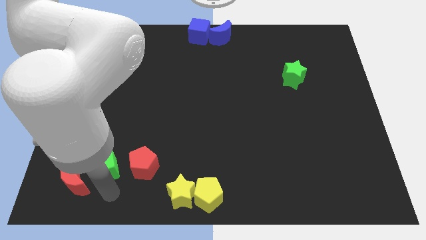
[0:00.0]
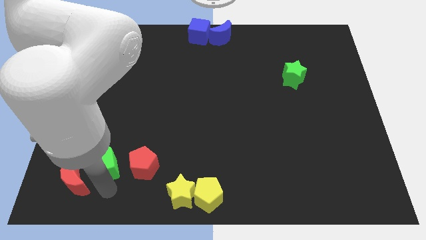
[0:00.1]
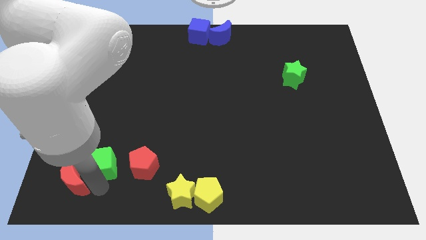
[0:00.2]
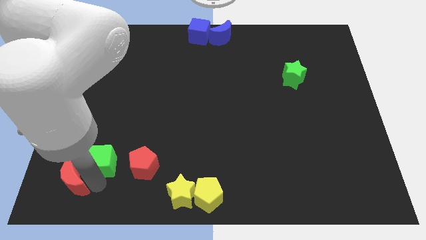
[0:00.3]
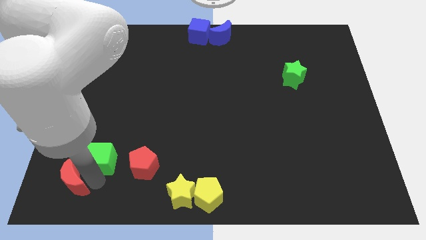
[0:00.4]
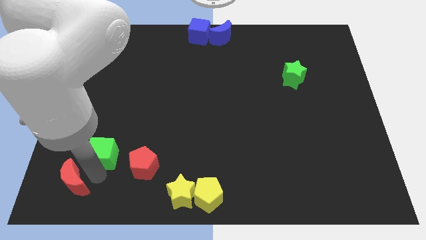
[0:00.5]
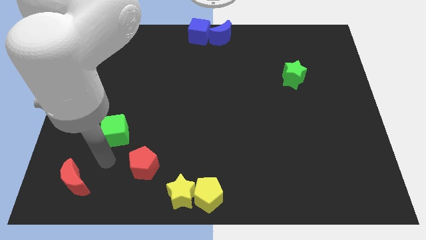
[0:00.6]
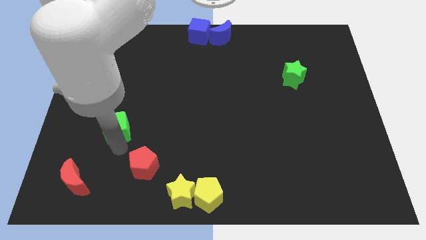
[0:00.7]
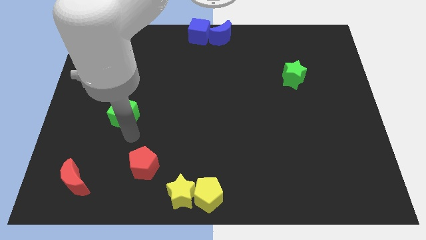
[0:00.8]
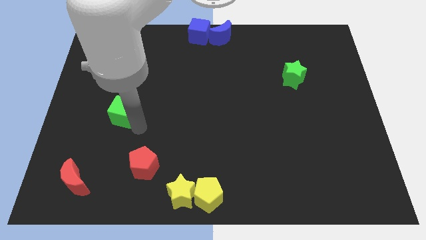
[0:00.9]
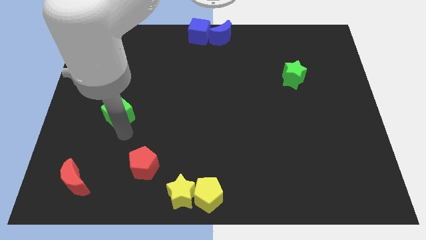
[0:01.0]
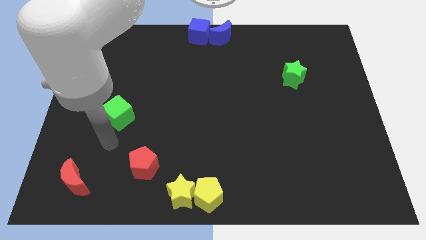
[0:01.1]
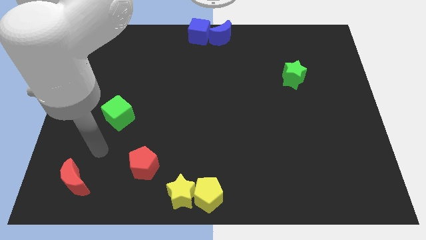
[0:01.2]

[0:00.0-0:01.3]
move the green cube to the center left

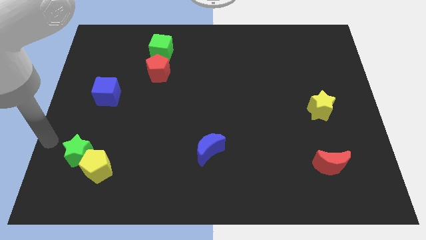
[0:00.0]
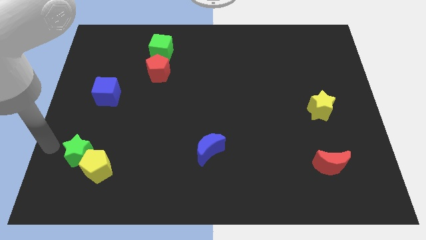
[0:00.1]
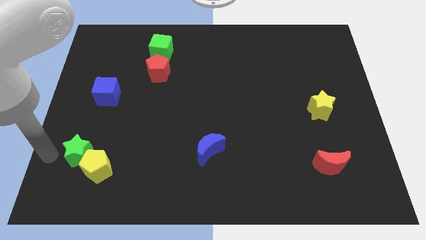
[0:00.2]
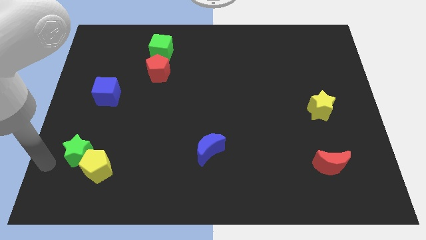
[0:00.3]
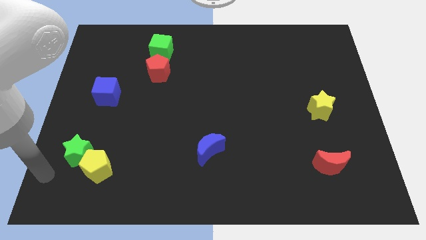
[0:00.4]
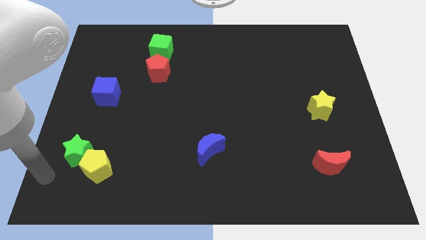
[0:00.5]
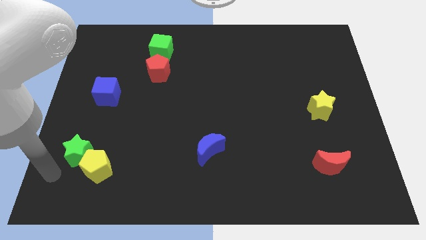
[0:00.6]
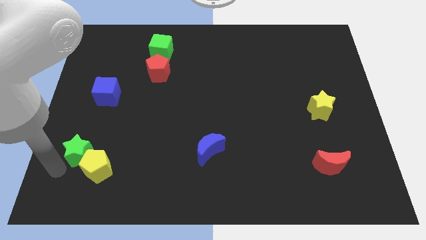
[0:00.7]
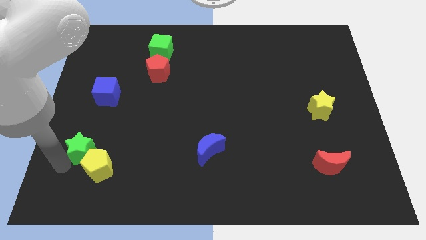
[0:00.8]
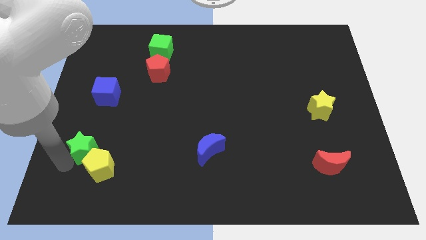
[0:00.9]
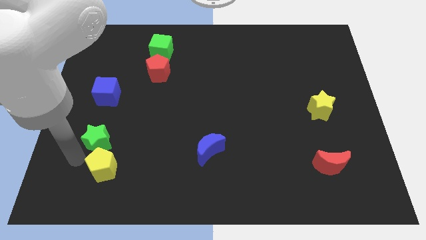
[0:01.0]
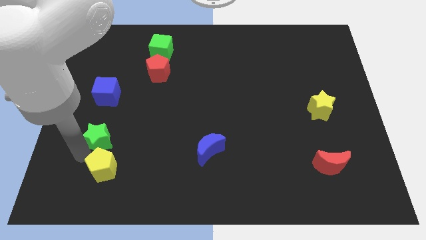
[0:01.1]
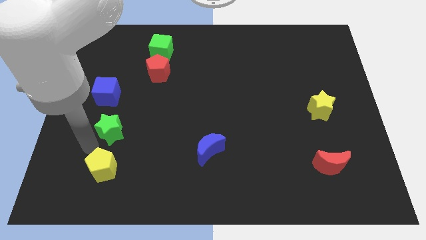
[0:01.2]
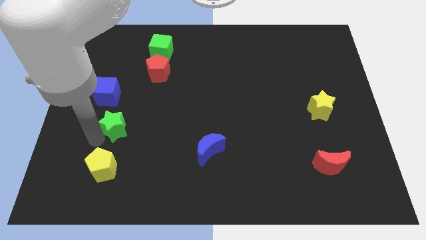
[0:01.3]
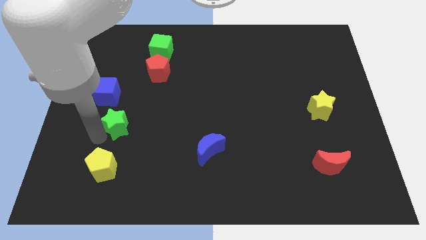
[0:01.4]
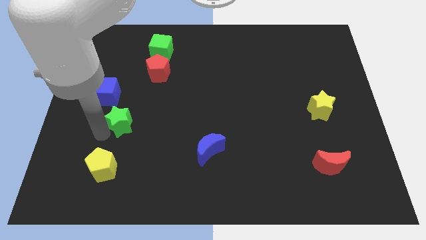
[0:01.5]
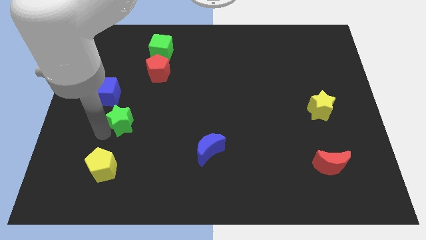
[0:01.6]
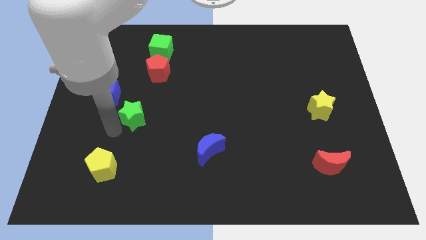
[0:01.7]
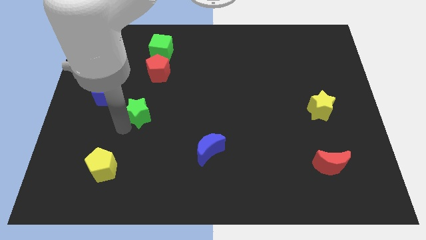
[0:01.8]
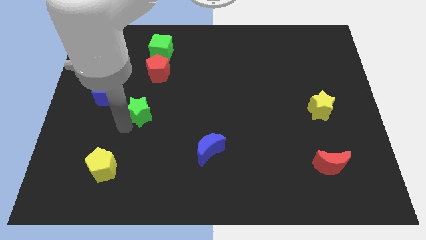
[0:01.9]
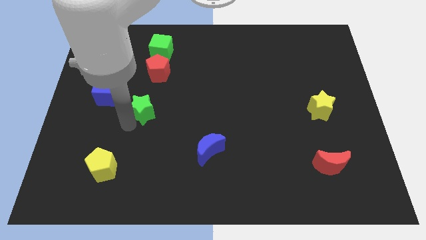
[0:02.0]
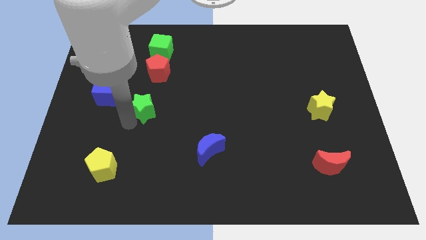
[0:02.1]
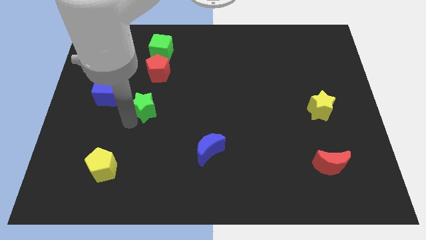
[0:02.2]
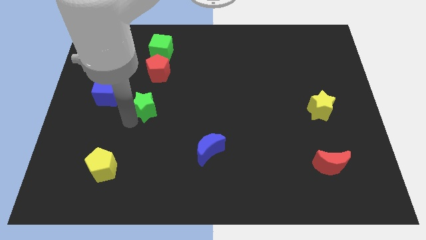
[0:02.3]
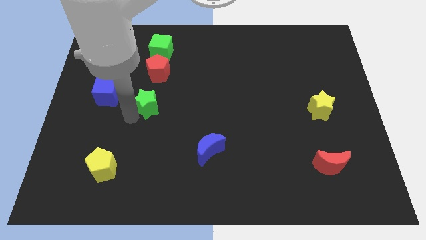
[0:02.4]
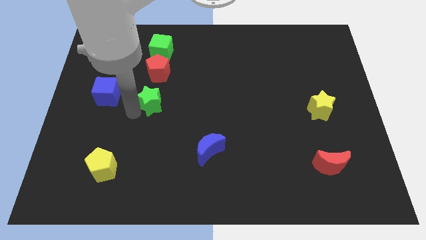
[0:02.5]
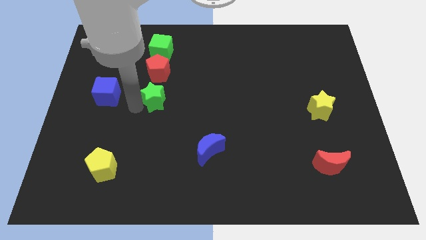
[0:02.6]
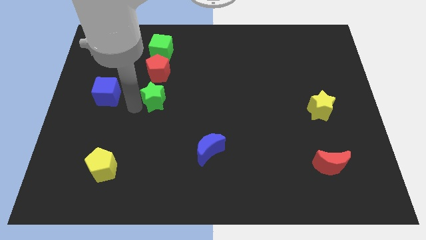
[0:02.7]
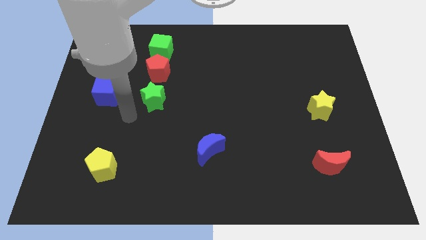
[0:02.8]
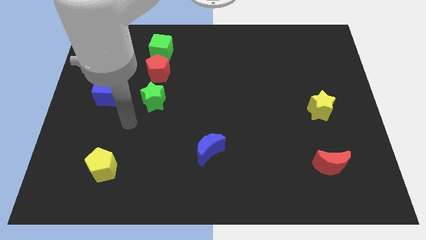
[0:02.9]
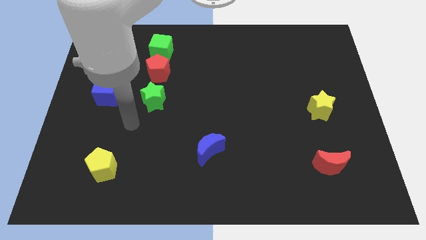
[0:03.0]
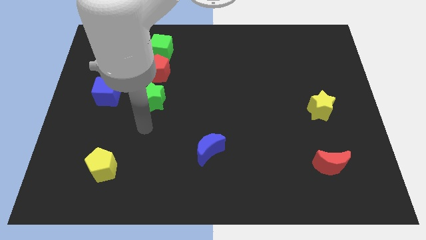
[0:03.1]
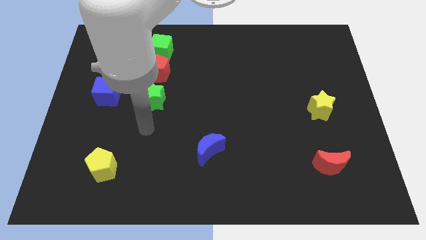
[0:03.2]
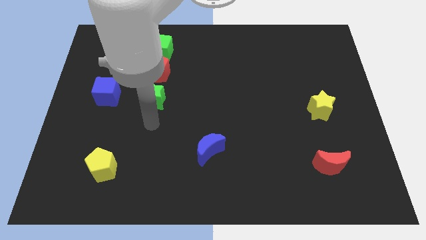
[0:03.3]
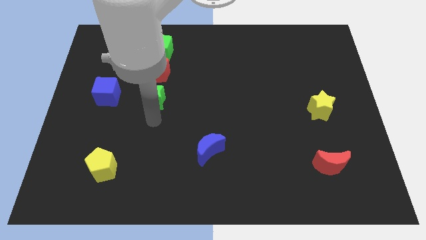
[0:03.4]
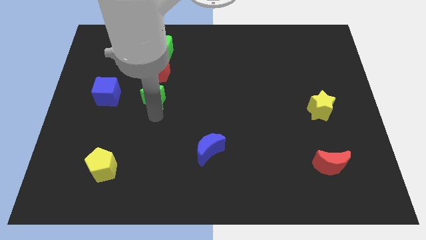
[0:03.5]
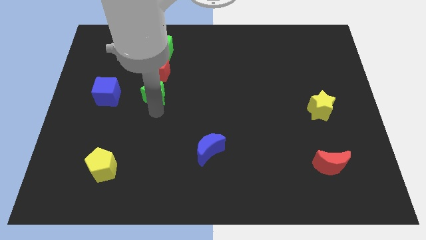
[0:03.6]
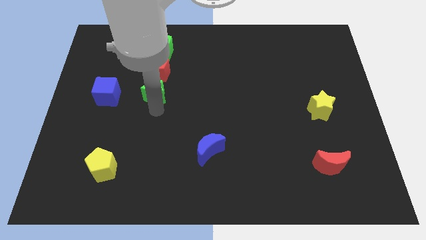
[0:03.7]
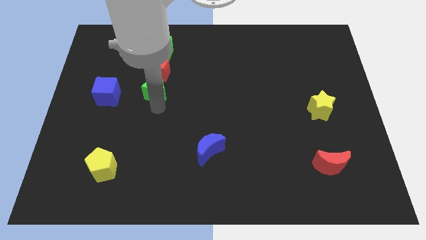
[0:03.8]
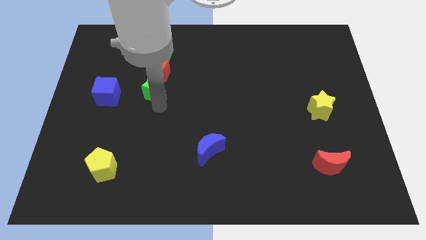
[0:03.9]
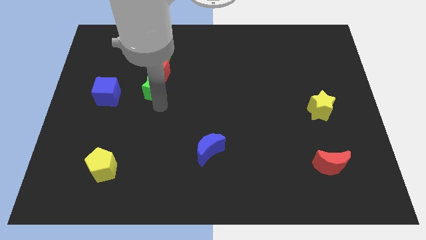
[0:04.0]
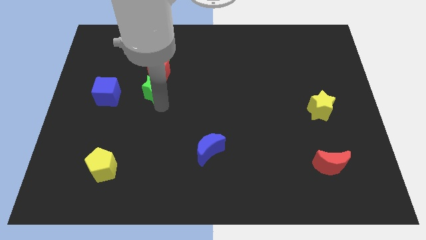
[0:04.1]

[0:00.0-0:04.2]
place the green star below the red pentagon

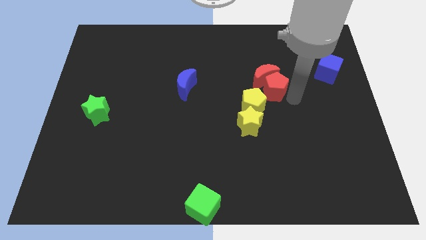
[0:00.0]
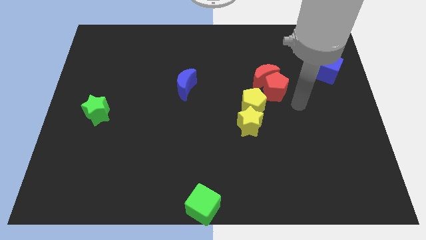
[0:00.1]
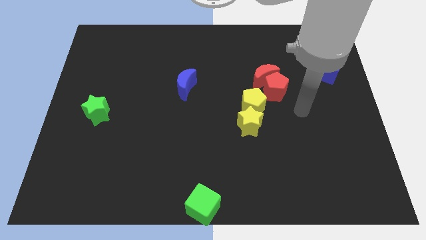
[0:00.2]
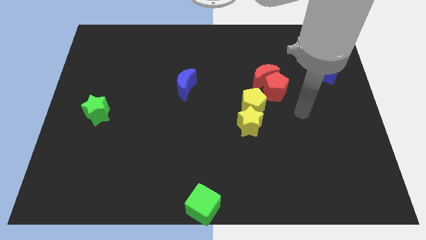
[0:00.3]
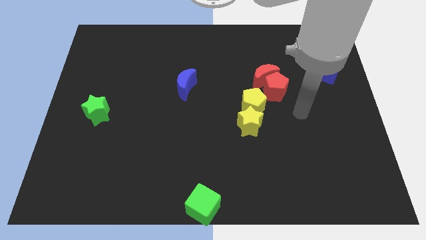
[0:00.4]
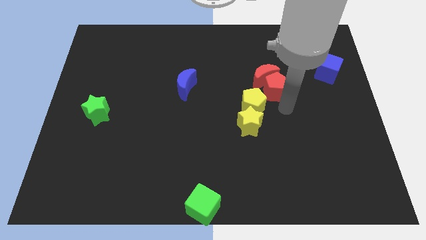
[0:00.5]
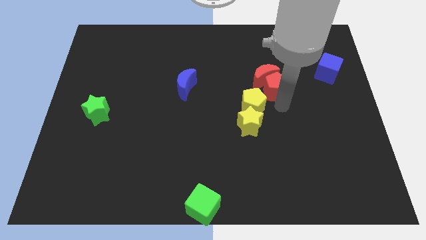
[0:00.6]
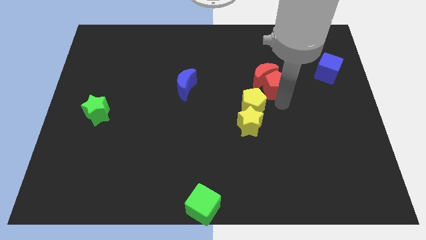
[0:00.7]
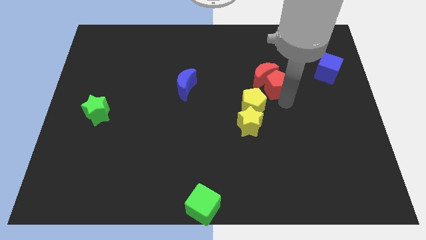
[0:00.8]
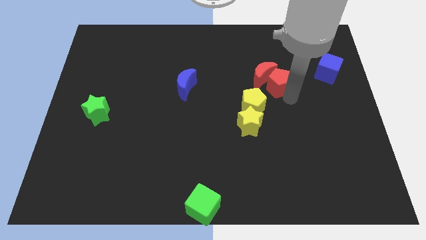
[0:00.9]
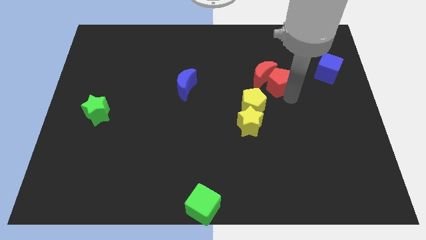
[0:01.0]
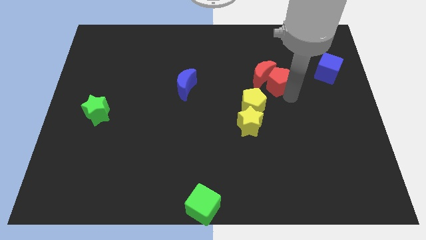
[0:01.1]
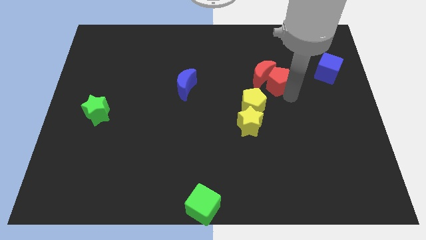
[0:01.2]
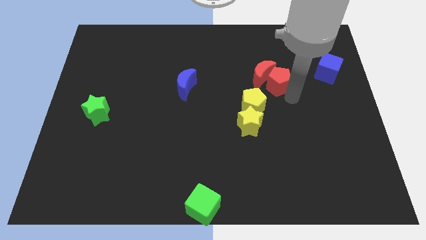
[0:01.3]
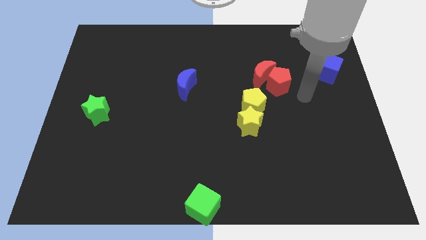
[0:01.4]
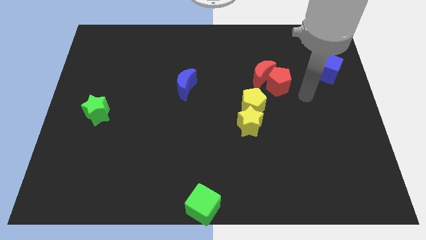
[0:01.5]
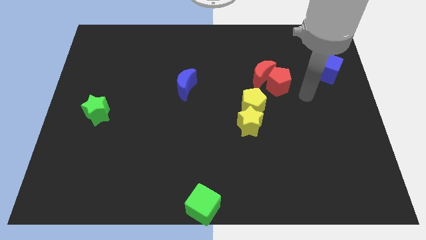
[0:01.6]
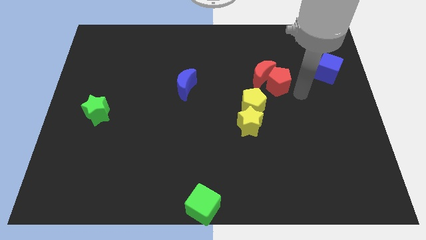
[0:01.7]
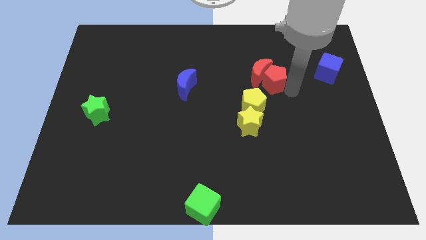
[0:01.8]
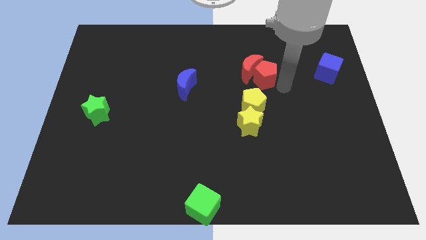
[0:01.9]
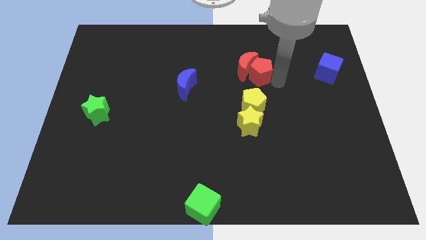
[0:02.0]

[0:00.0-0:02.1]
push the red pentagon along the red crescent to the top of the yellow pentagon

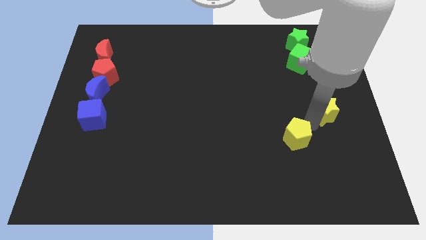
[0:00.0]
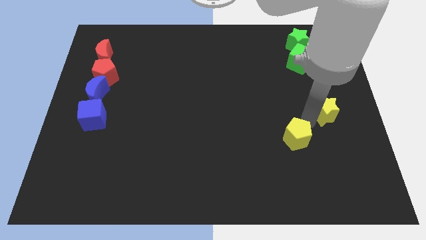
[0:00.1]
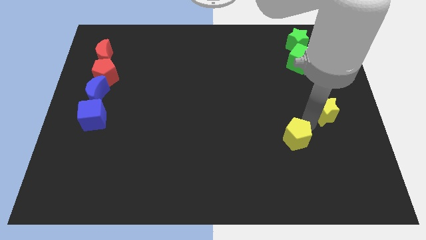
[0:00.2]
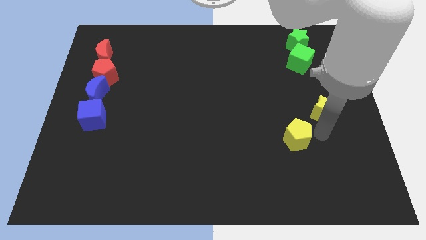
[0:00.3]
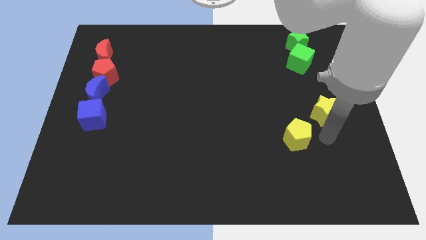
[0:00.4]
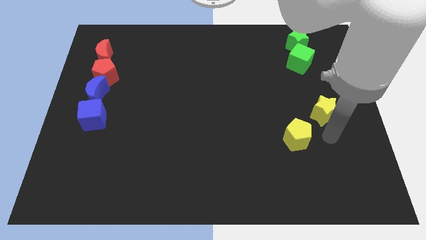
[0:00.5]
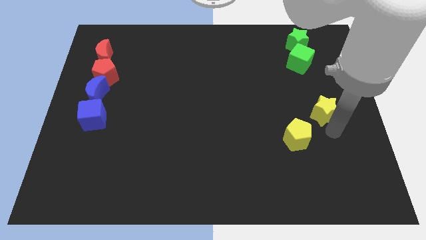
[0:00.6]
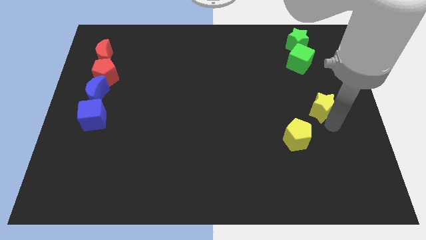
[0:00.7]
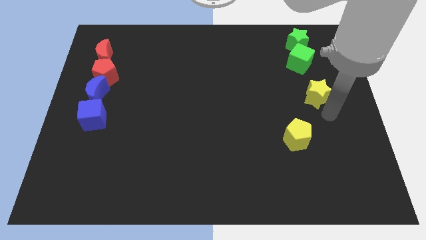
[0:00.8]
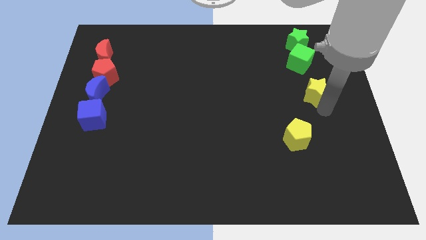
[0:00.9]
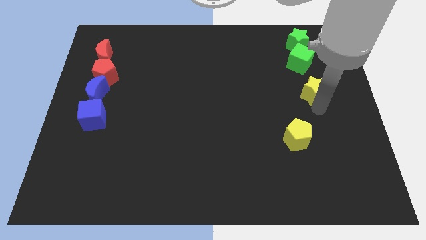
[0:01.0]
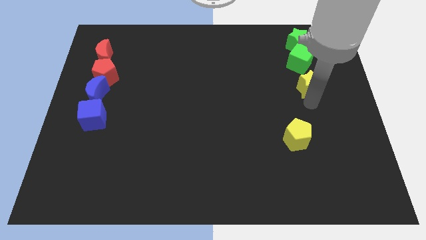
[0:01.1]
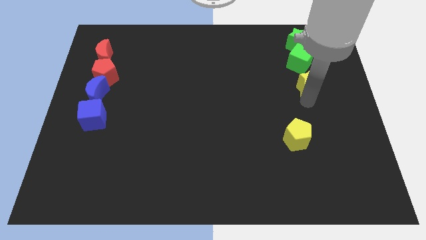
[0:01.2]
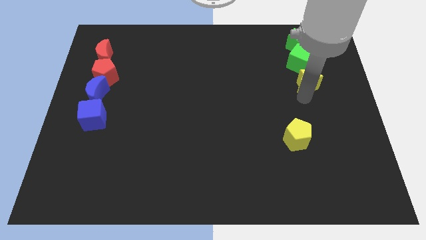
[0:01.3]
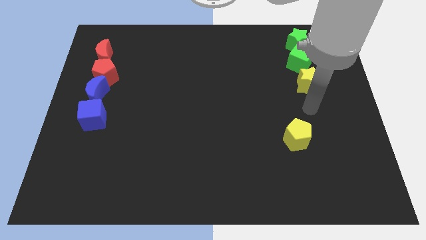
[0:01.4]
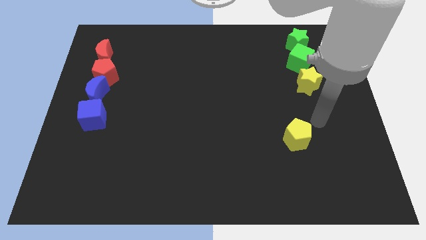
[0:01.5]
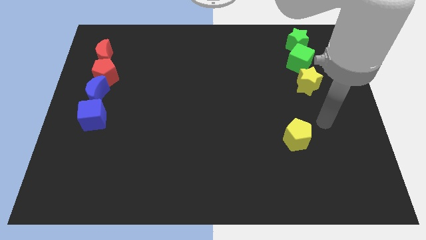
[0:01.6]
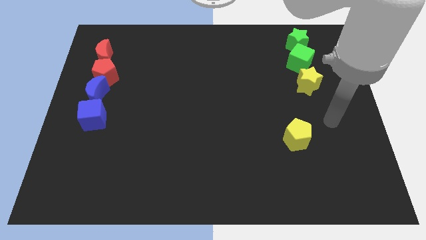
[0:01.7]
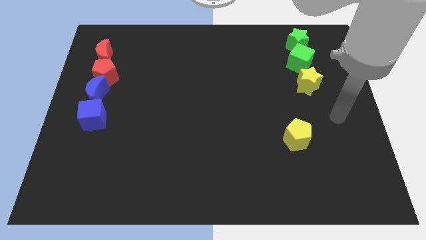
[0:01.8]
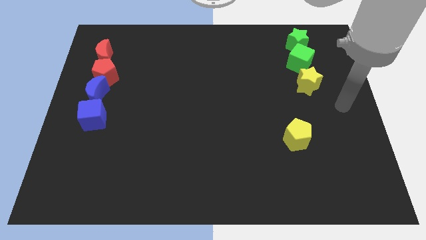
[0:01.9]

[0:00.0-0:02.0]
move the yellow star to the bottom side of the green cube
